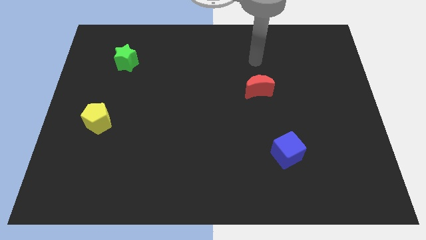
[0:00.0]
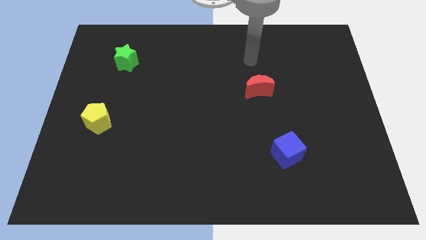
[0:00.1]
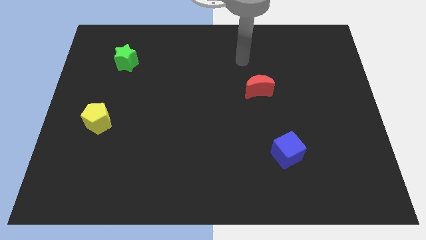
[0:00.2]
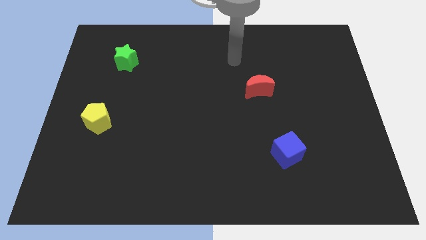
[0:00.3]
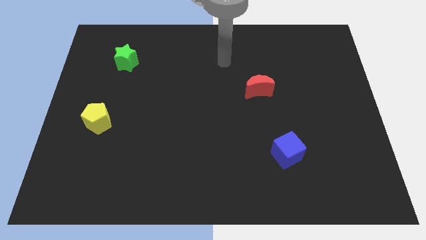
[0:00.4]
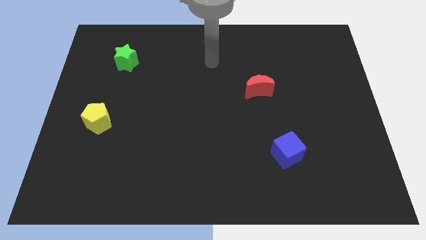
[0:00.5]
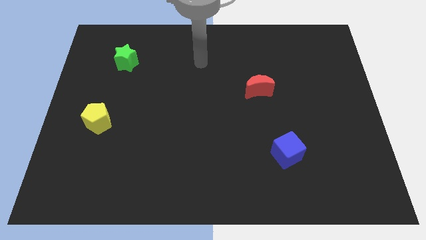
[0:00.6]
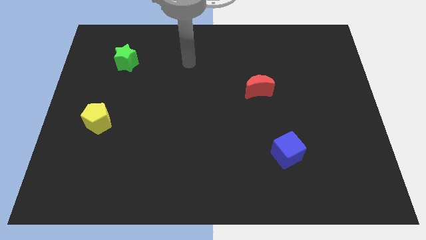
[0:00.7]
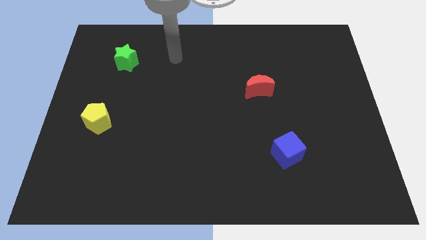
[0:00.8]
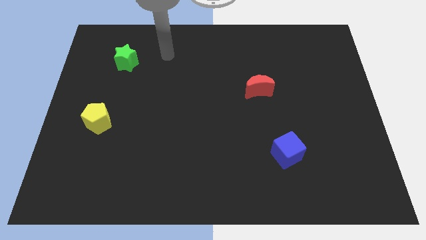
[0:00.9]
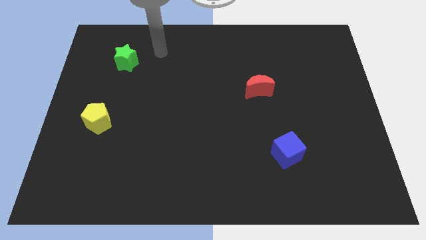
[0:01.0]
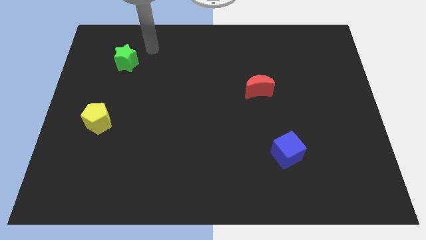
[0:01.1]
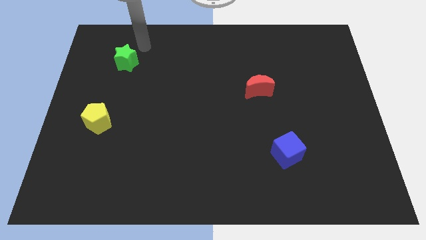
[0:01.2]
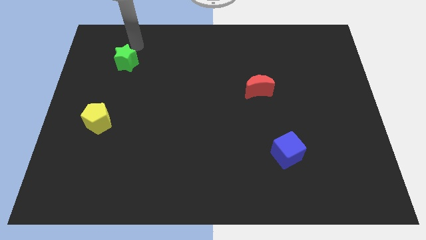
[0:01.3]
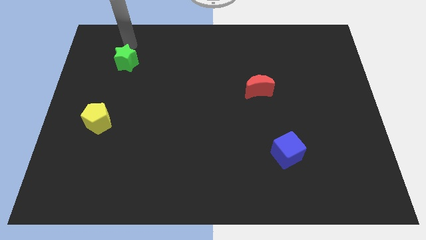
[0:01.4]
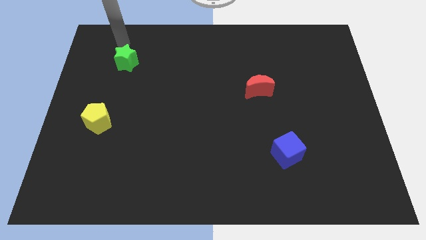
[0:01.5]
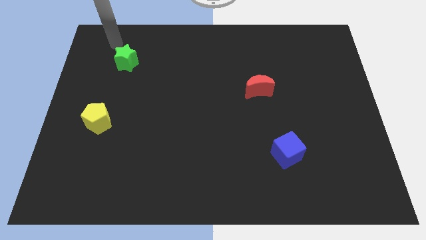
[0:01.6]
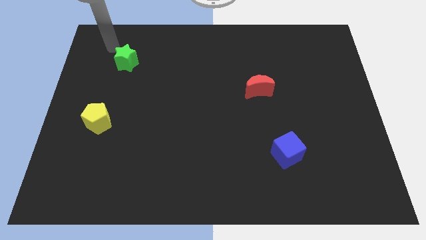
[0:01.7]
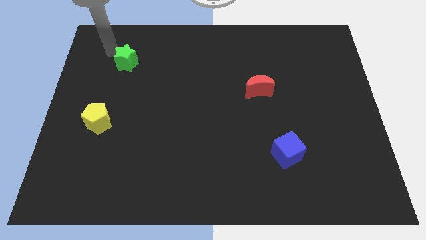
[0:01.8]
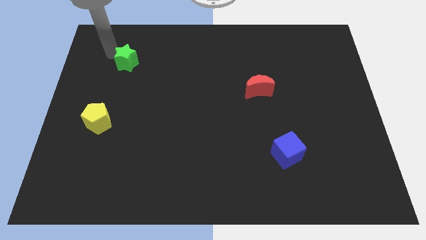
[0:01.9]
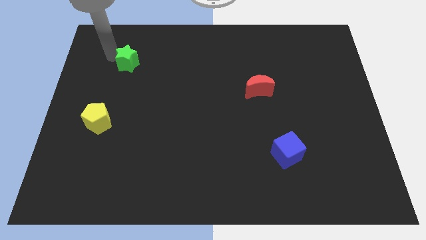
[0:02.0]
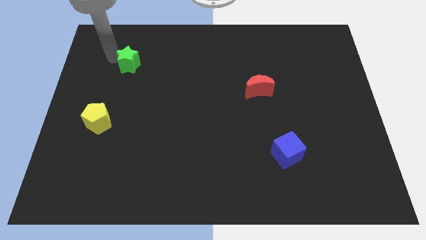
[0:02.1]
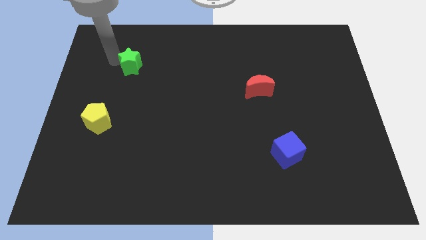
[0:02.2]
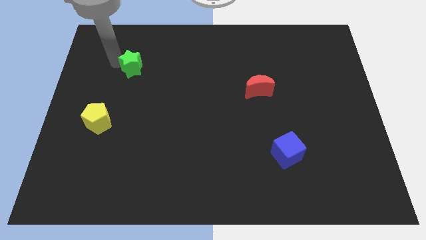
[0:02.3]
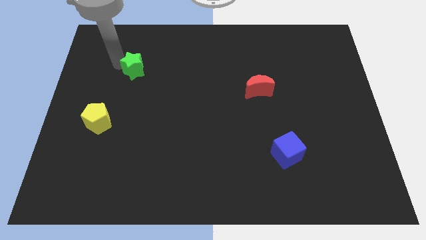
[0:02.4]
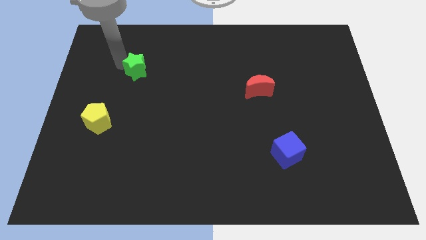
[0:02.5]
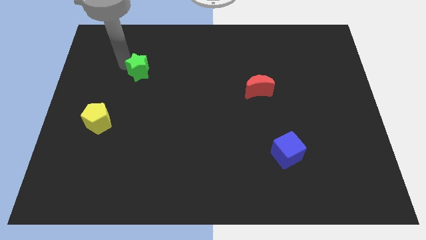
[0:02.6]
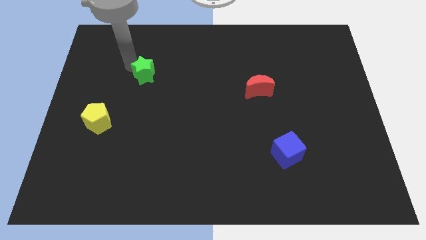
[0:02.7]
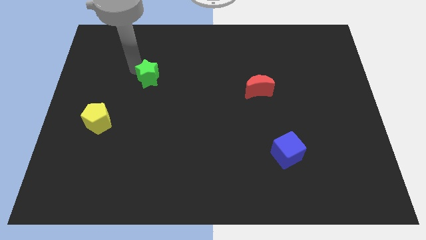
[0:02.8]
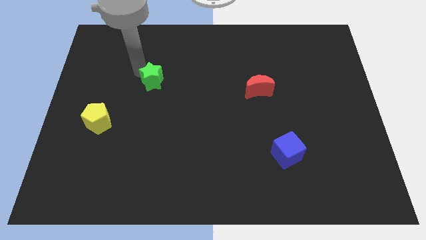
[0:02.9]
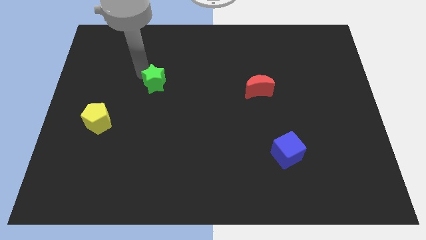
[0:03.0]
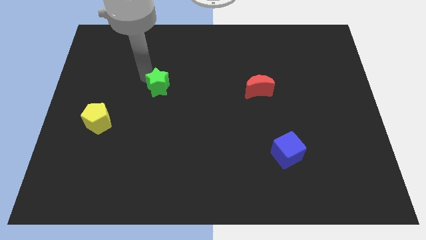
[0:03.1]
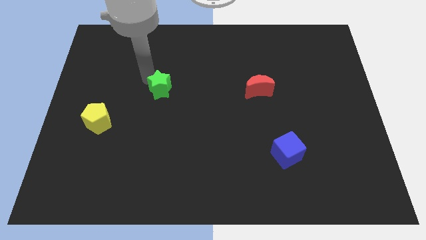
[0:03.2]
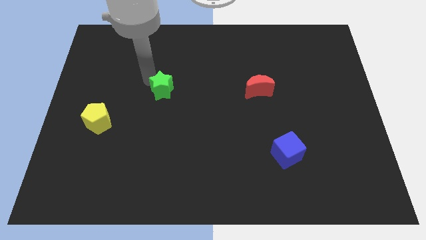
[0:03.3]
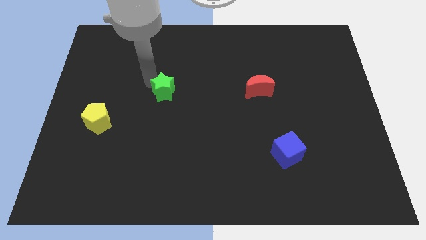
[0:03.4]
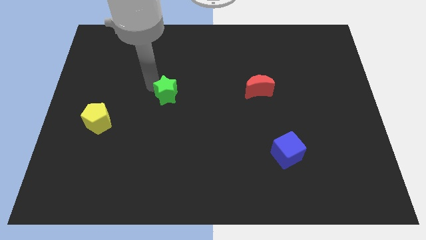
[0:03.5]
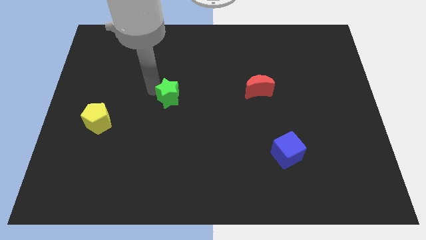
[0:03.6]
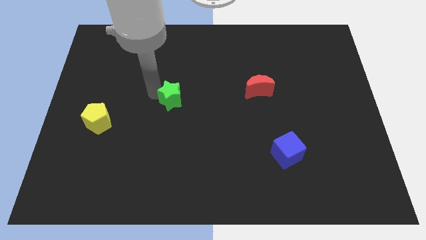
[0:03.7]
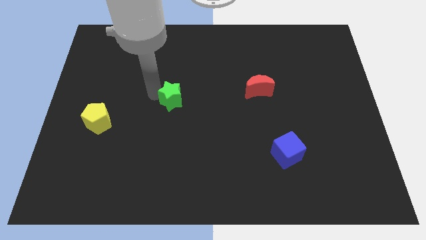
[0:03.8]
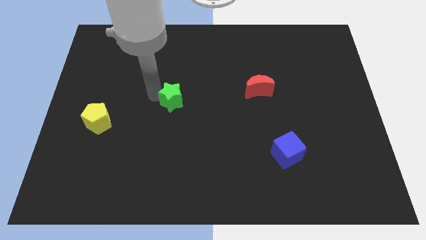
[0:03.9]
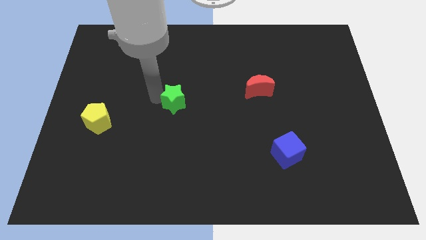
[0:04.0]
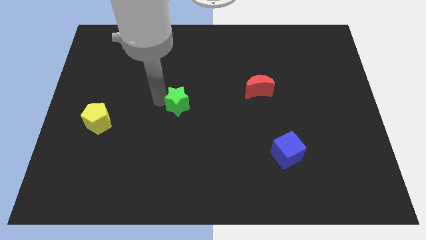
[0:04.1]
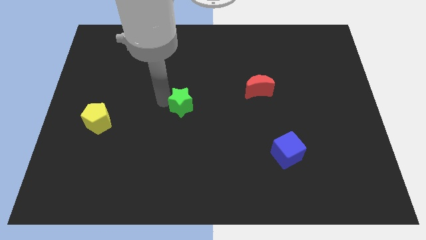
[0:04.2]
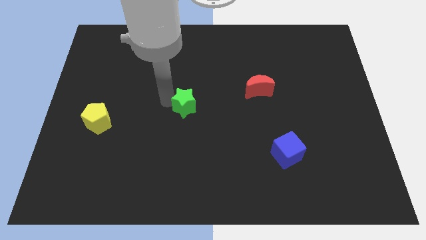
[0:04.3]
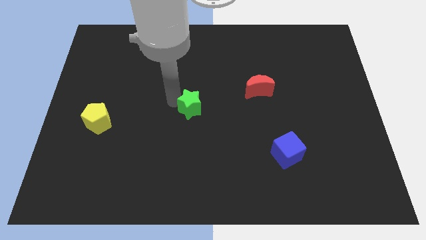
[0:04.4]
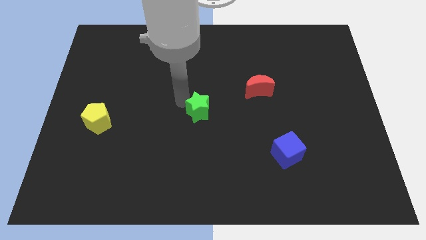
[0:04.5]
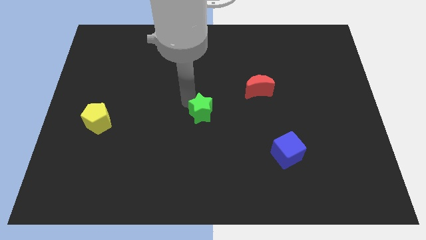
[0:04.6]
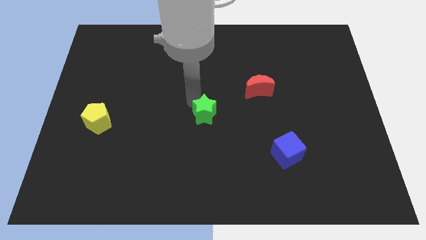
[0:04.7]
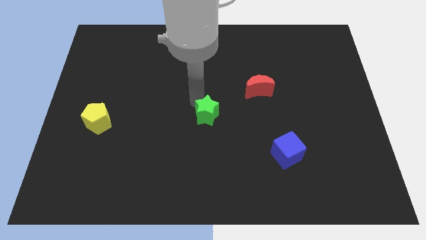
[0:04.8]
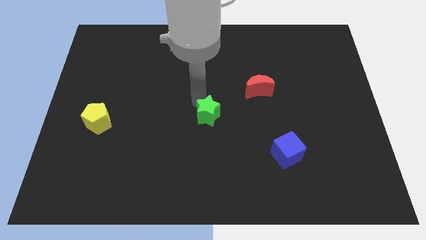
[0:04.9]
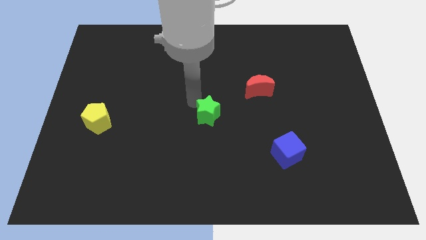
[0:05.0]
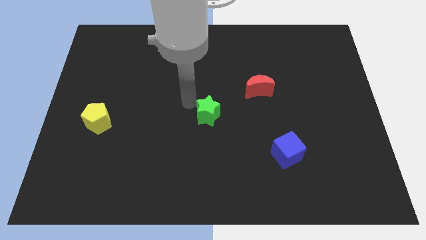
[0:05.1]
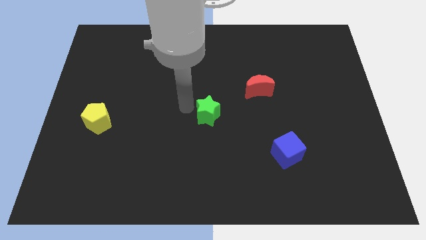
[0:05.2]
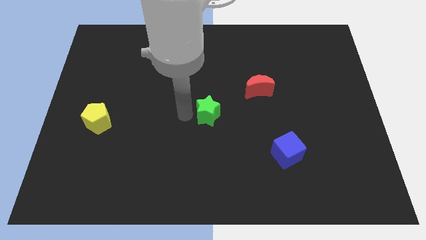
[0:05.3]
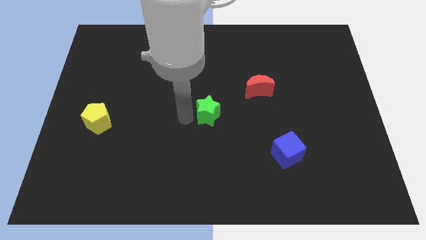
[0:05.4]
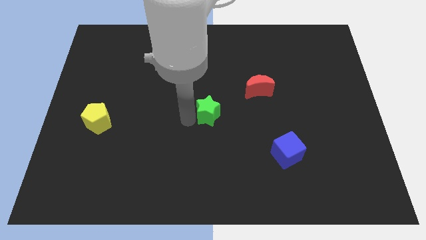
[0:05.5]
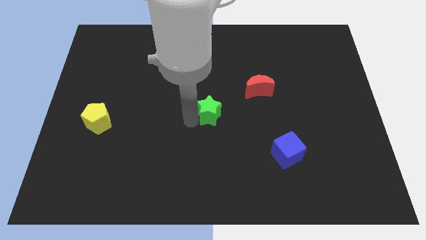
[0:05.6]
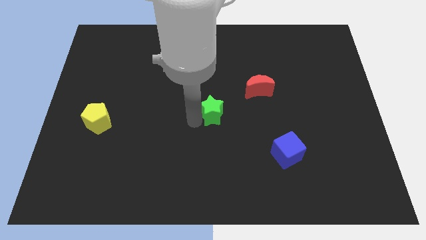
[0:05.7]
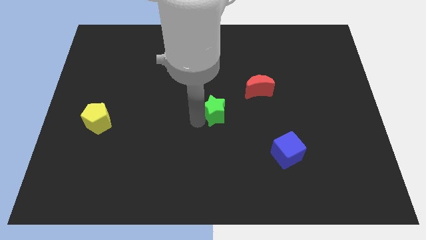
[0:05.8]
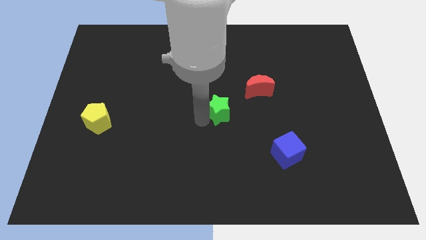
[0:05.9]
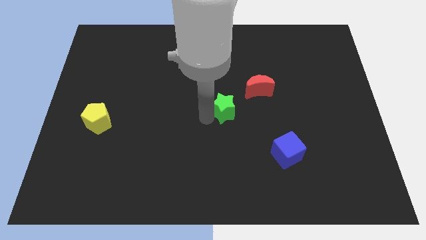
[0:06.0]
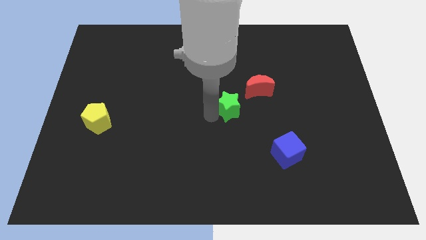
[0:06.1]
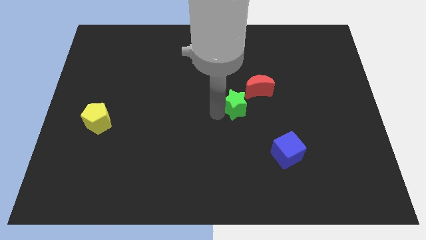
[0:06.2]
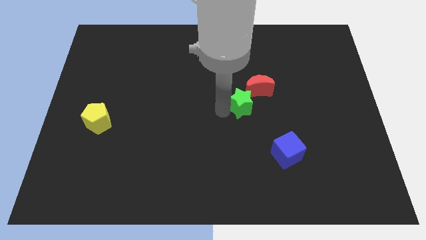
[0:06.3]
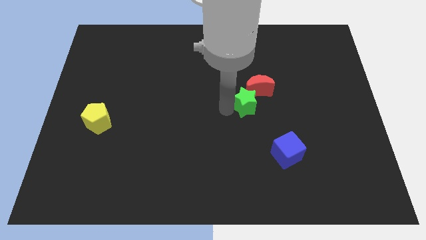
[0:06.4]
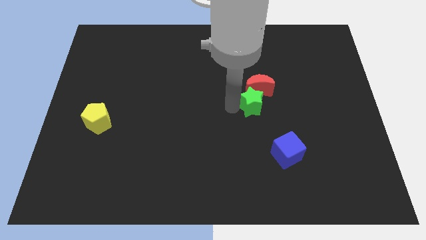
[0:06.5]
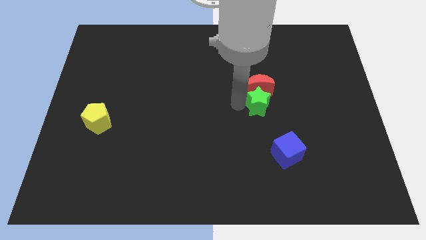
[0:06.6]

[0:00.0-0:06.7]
push the green star to the moon

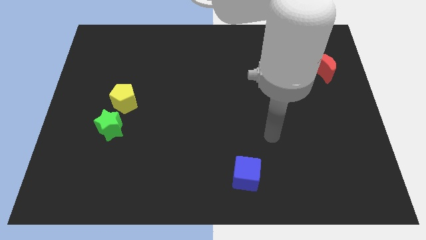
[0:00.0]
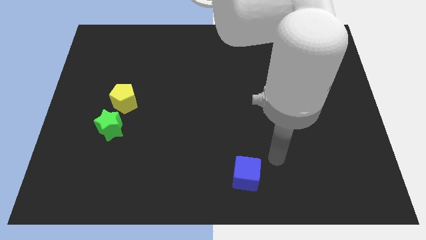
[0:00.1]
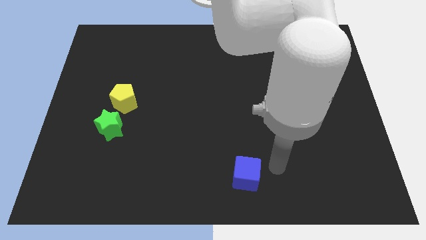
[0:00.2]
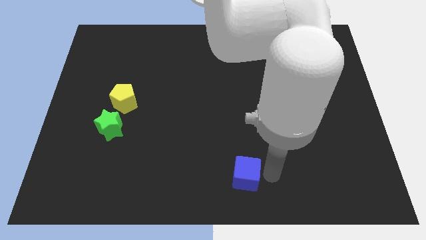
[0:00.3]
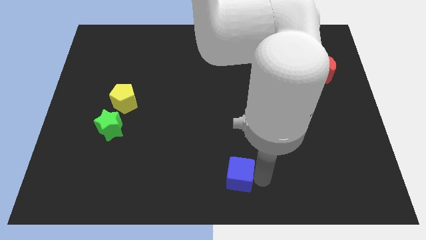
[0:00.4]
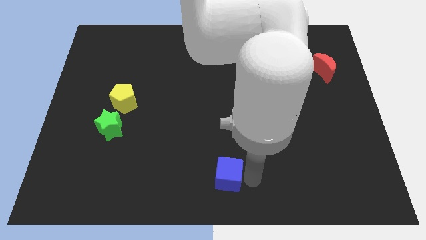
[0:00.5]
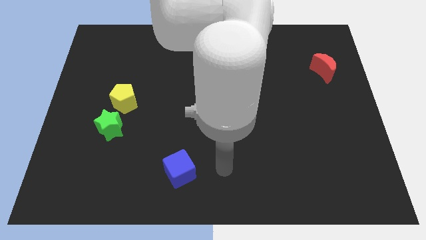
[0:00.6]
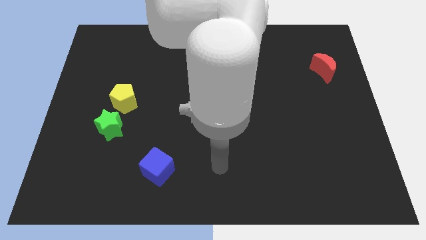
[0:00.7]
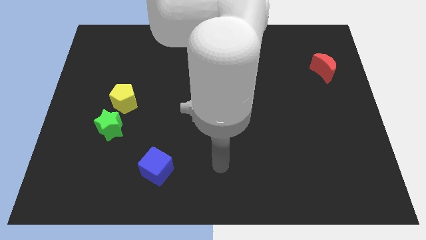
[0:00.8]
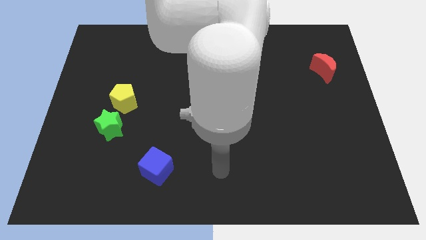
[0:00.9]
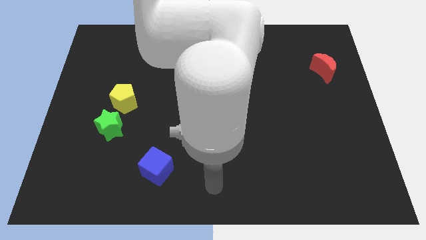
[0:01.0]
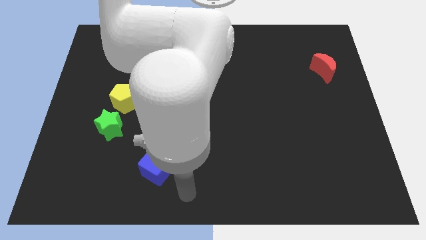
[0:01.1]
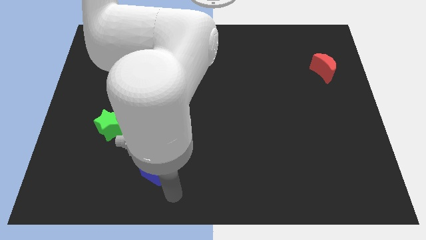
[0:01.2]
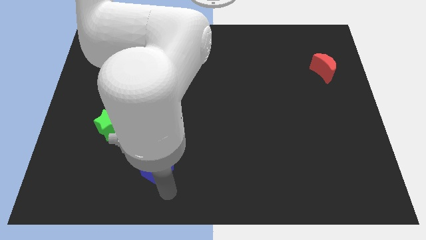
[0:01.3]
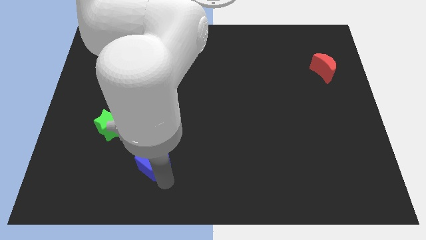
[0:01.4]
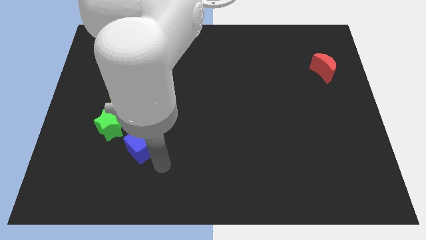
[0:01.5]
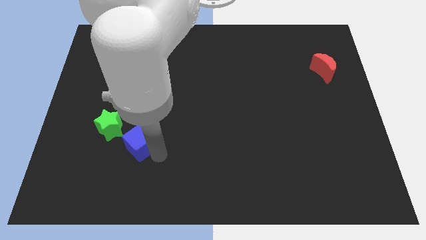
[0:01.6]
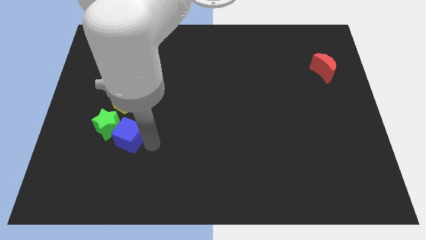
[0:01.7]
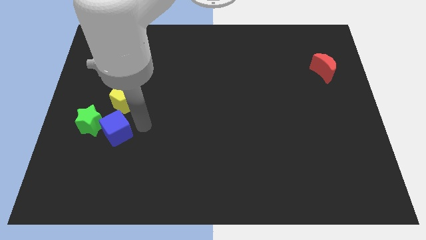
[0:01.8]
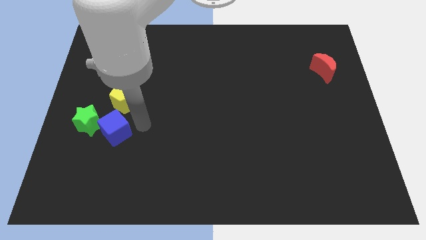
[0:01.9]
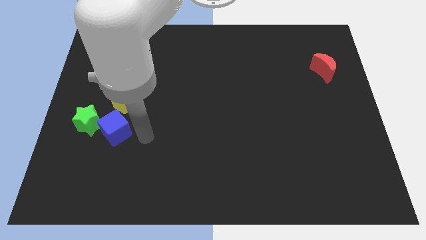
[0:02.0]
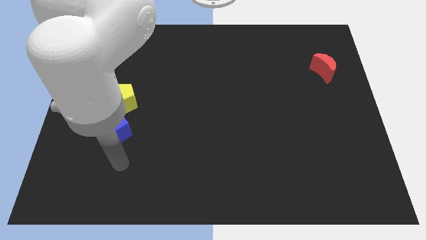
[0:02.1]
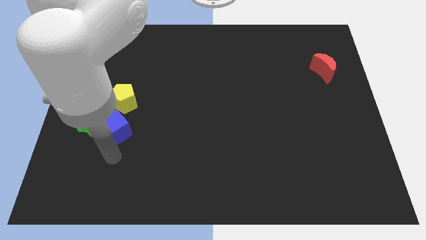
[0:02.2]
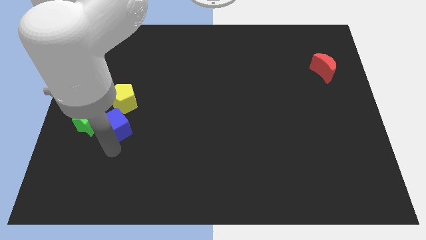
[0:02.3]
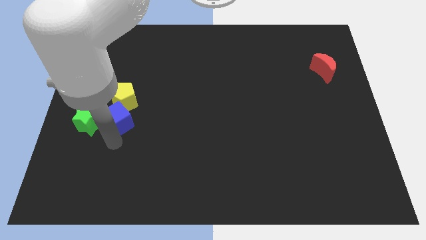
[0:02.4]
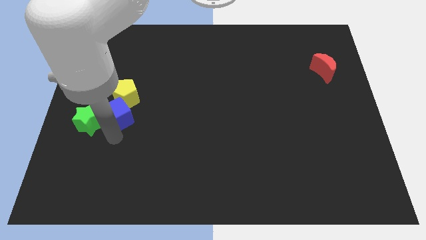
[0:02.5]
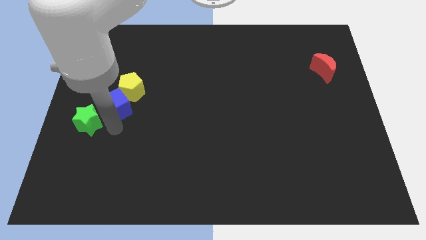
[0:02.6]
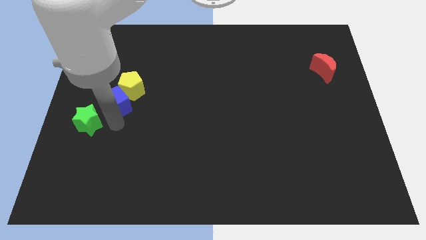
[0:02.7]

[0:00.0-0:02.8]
move the cube towards the yellow block
